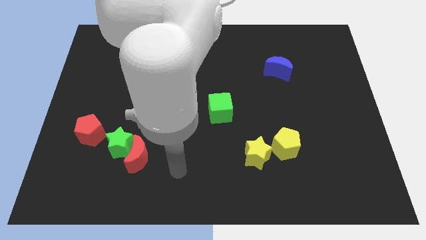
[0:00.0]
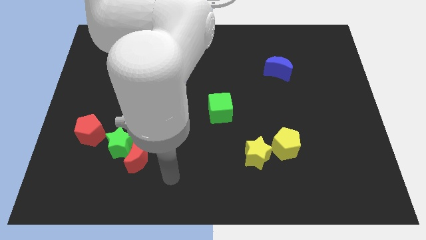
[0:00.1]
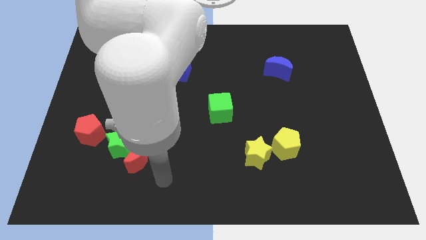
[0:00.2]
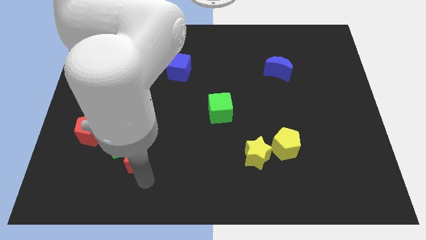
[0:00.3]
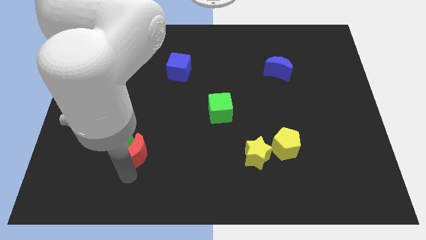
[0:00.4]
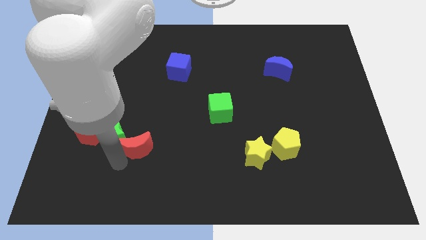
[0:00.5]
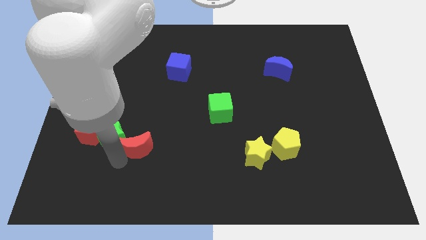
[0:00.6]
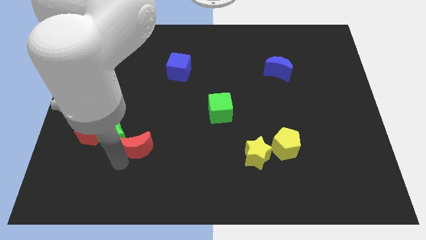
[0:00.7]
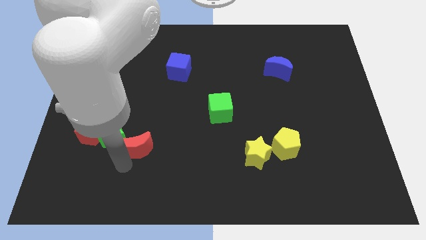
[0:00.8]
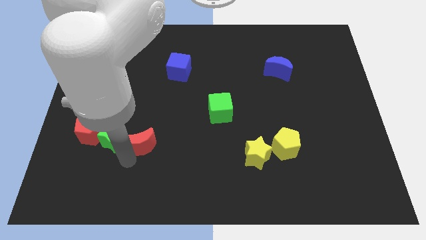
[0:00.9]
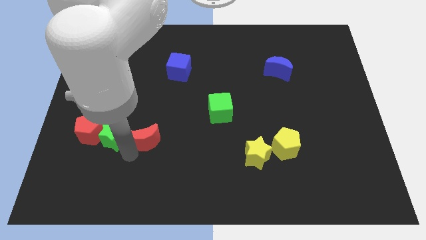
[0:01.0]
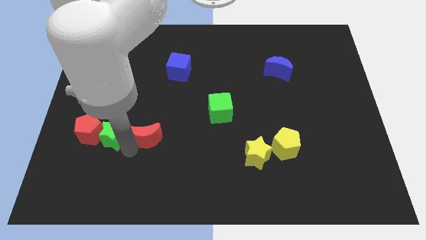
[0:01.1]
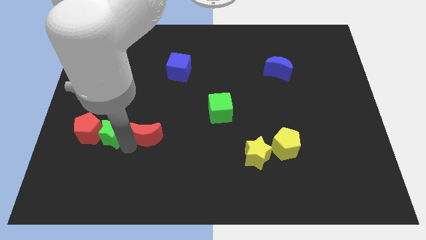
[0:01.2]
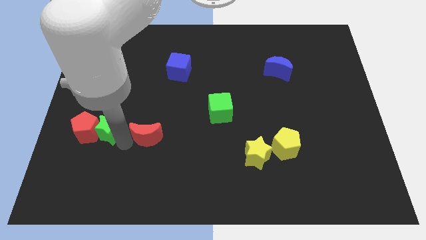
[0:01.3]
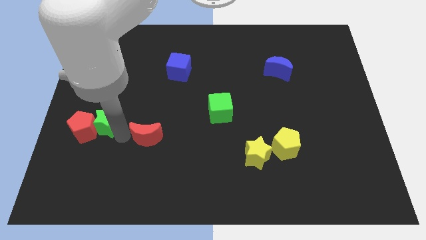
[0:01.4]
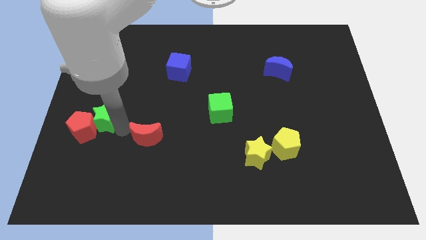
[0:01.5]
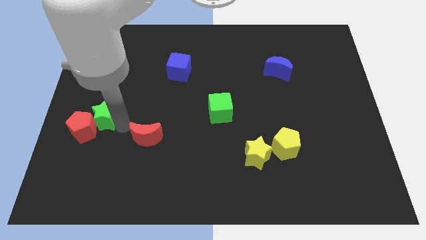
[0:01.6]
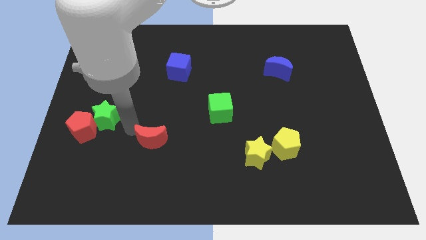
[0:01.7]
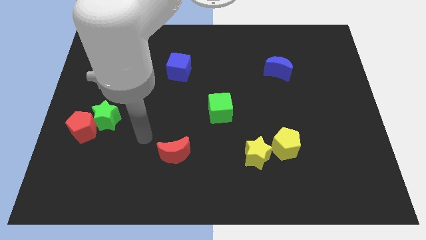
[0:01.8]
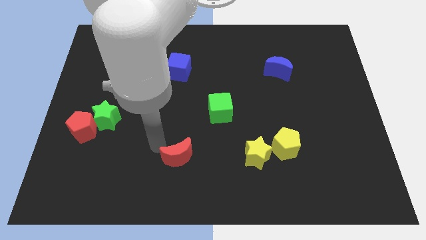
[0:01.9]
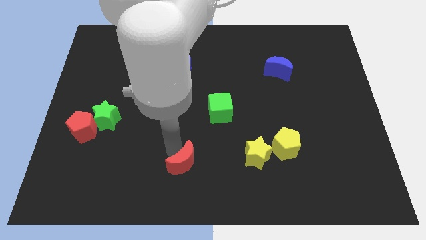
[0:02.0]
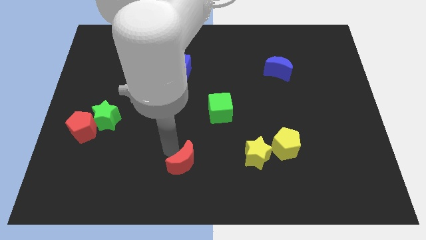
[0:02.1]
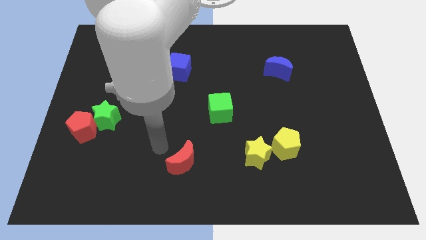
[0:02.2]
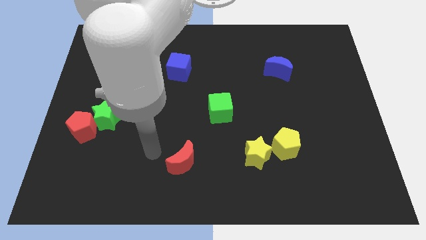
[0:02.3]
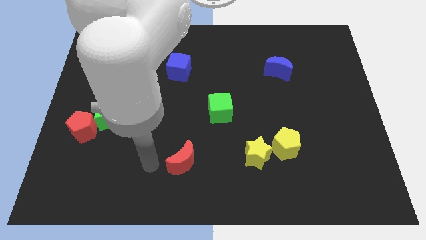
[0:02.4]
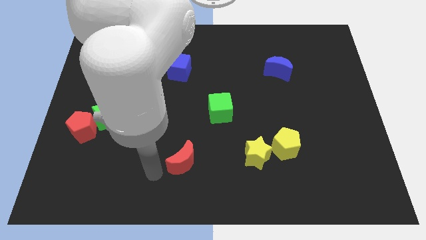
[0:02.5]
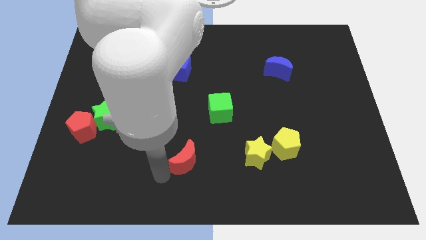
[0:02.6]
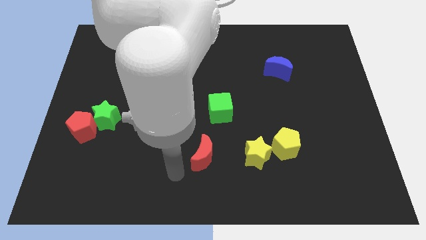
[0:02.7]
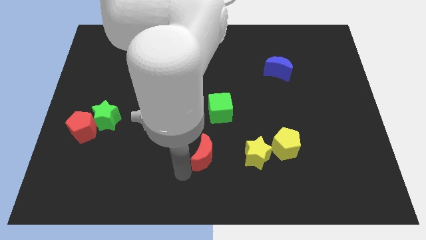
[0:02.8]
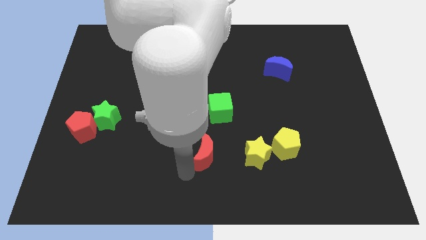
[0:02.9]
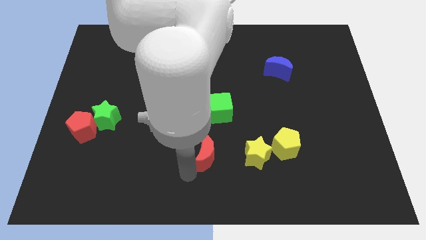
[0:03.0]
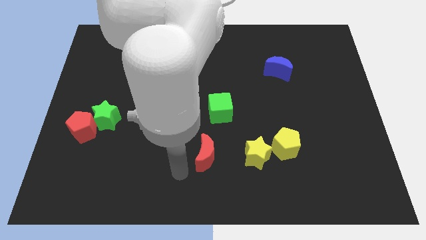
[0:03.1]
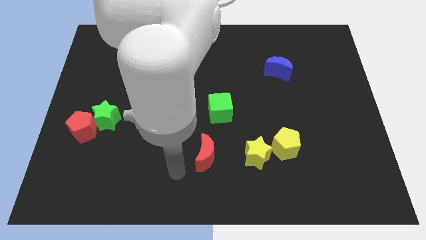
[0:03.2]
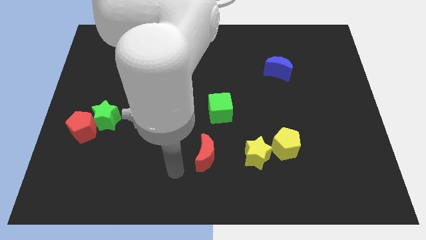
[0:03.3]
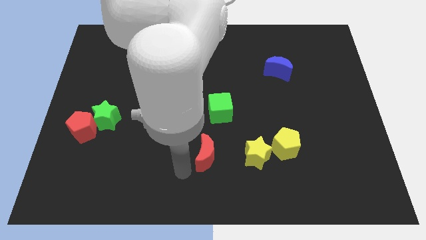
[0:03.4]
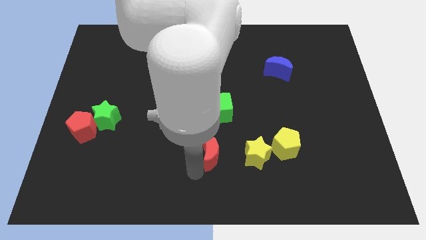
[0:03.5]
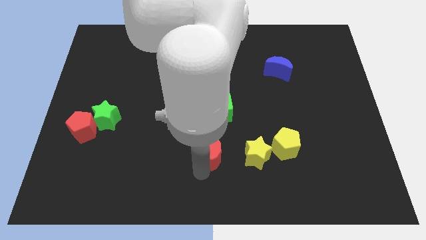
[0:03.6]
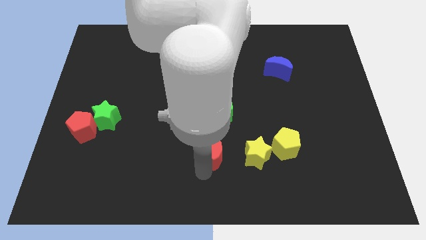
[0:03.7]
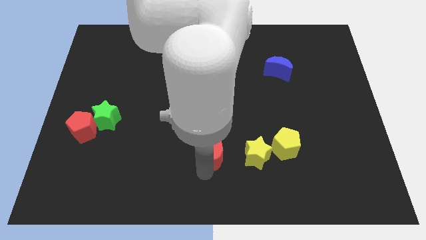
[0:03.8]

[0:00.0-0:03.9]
place the red crescent at the bottom of the green cube vertically

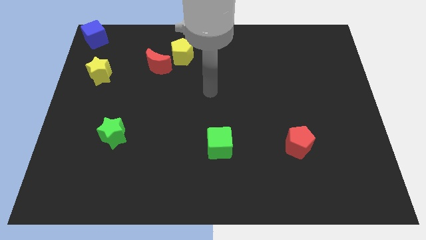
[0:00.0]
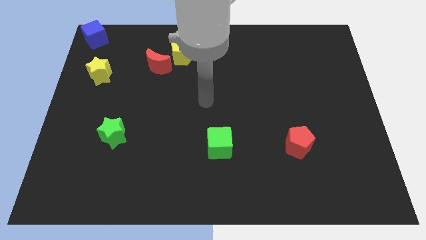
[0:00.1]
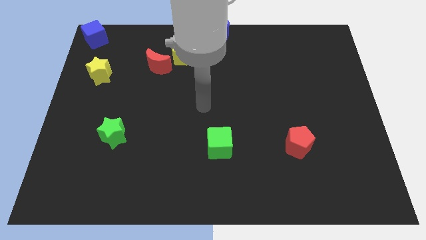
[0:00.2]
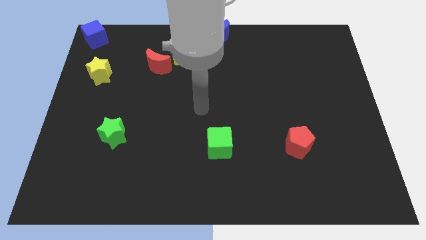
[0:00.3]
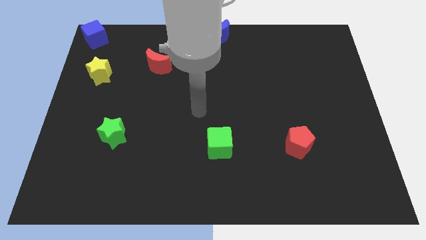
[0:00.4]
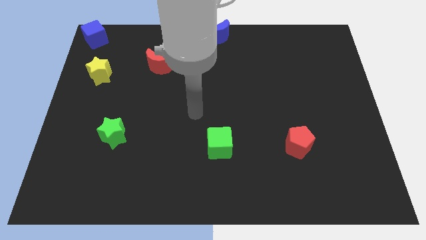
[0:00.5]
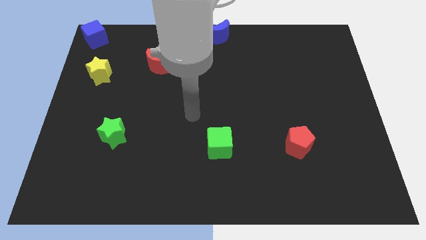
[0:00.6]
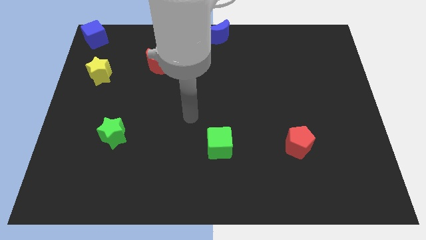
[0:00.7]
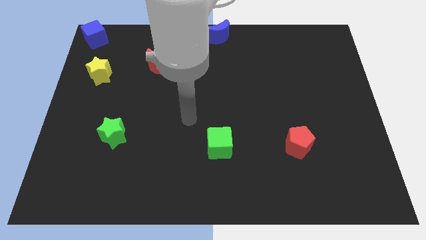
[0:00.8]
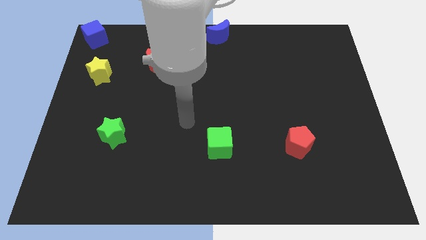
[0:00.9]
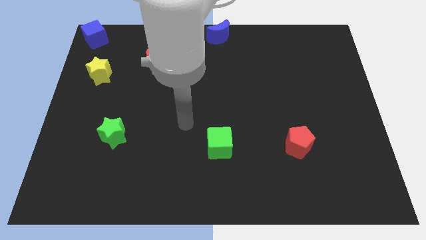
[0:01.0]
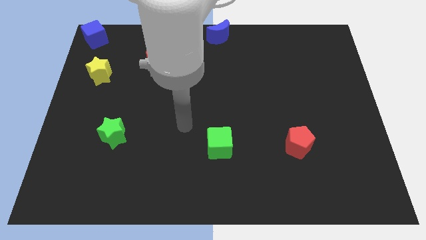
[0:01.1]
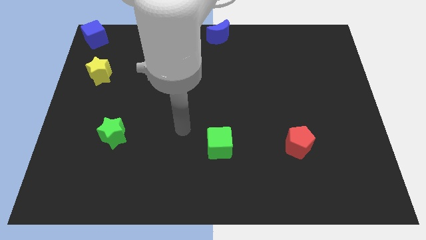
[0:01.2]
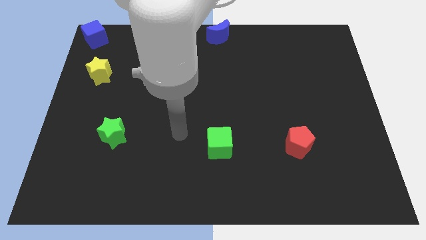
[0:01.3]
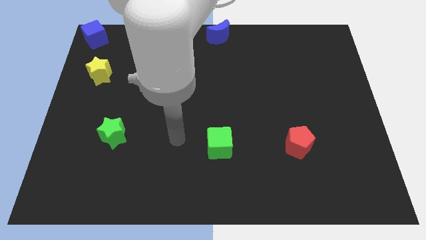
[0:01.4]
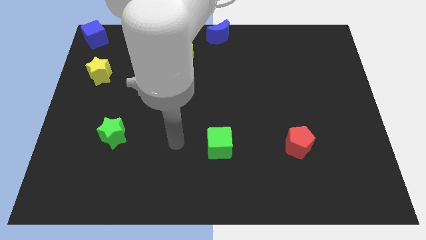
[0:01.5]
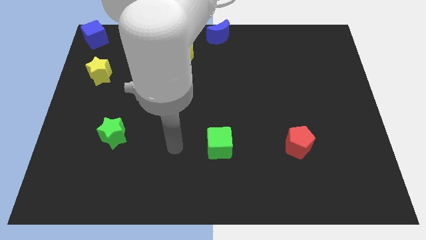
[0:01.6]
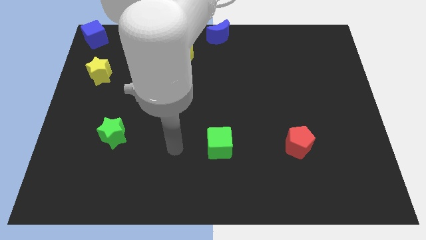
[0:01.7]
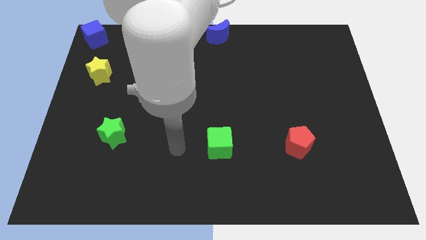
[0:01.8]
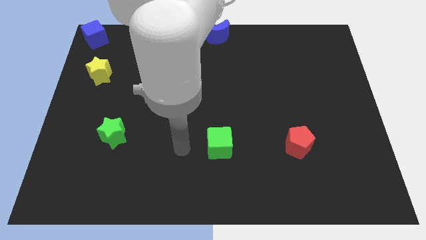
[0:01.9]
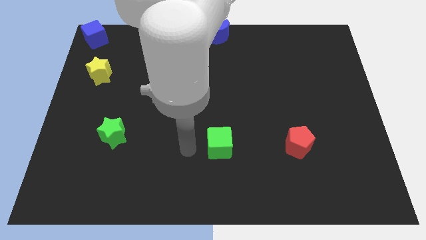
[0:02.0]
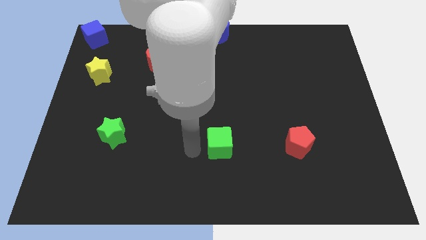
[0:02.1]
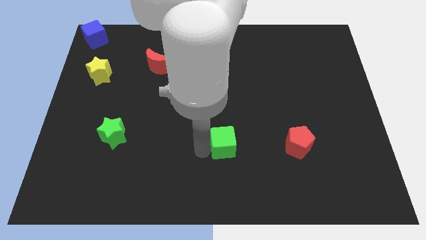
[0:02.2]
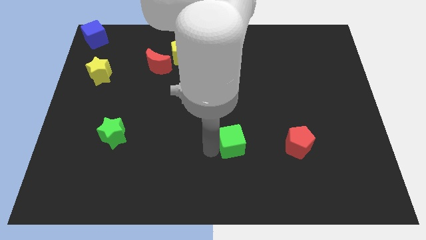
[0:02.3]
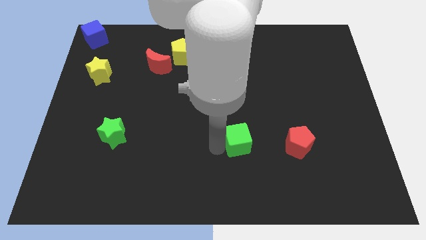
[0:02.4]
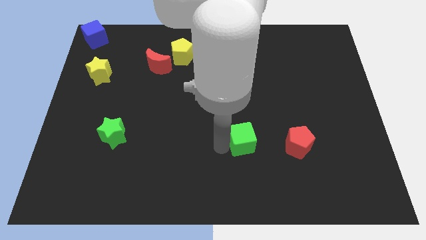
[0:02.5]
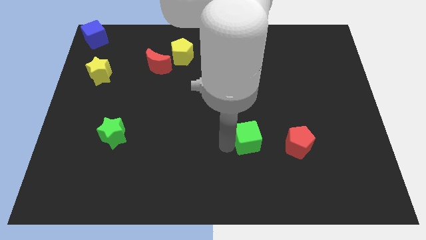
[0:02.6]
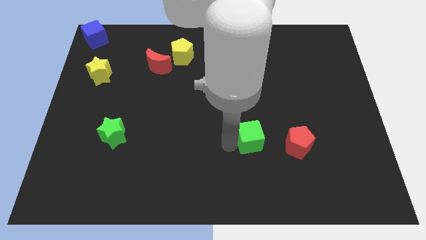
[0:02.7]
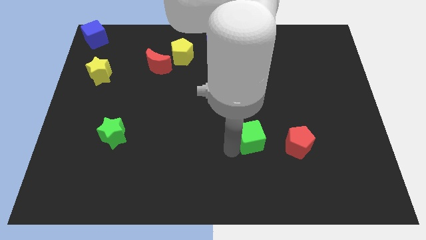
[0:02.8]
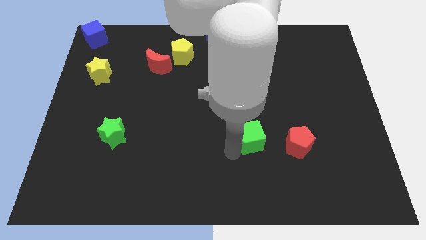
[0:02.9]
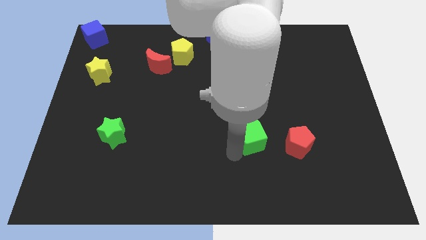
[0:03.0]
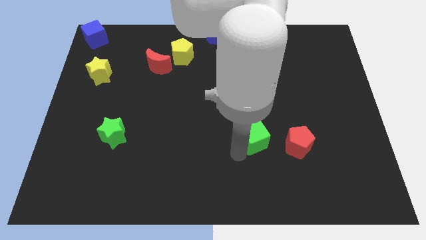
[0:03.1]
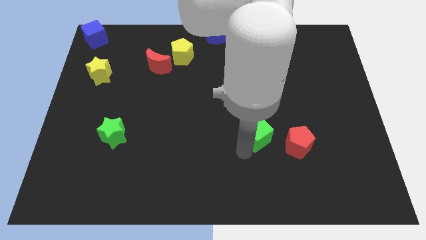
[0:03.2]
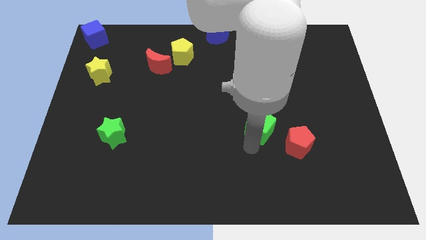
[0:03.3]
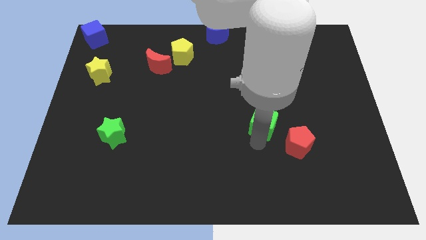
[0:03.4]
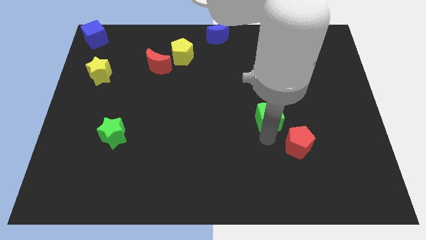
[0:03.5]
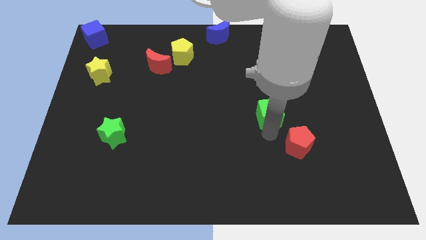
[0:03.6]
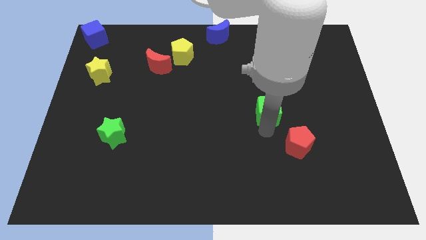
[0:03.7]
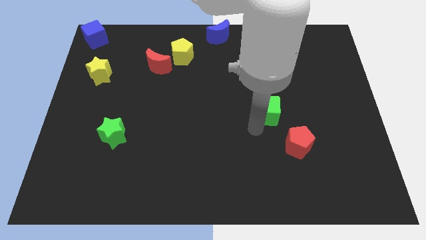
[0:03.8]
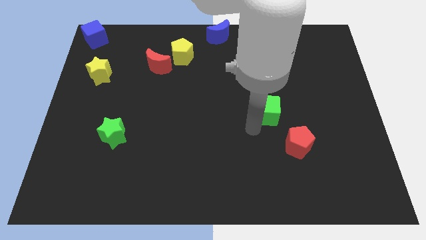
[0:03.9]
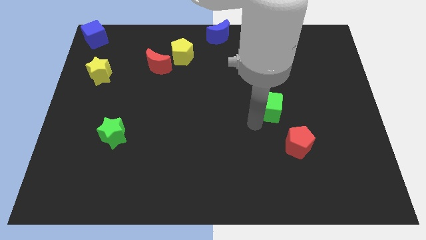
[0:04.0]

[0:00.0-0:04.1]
push the green cube diagonally to the top left of the red pentagon

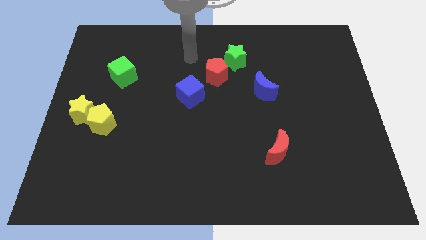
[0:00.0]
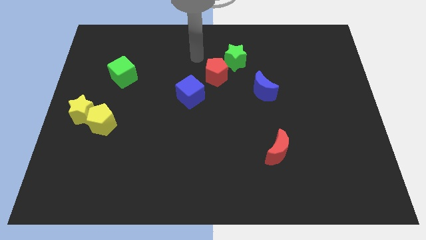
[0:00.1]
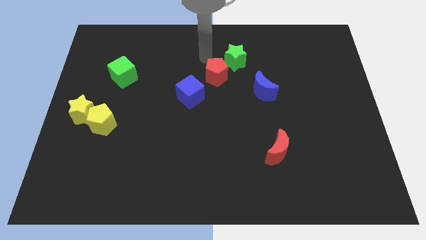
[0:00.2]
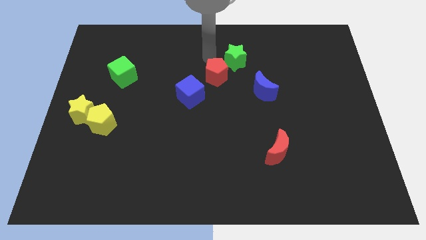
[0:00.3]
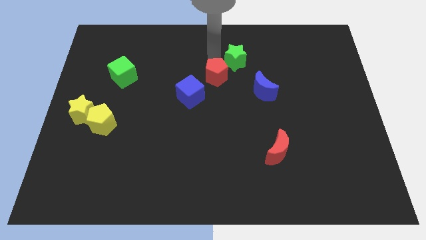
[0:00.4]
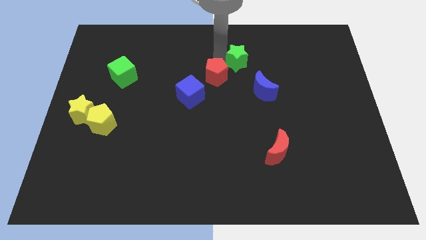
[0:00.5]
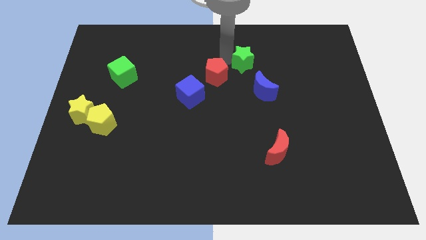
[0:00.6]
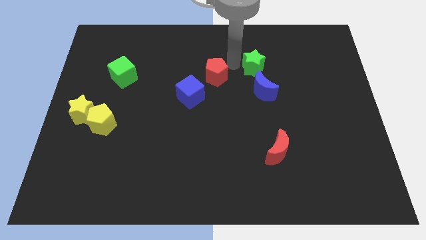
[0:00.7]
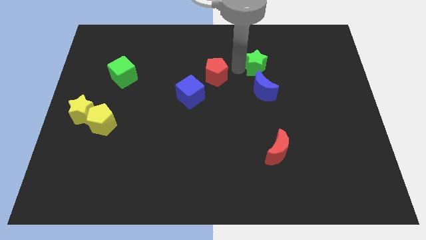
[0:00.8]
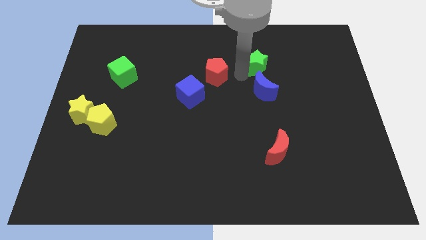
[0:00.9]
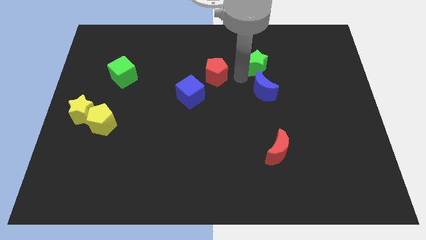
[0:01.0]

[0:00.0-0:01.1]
push green star above blue crescent
